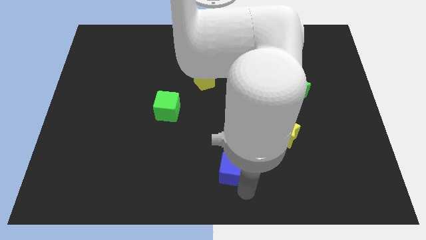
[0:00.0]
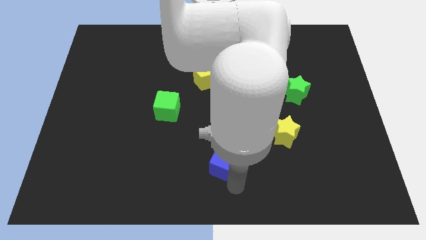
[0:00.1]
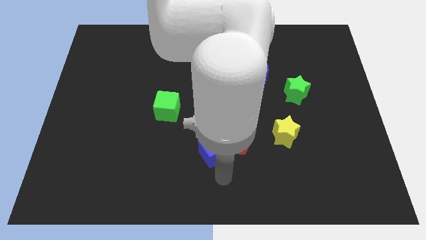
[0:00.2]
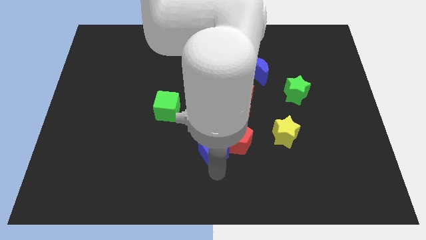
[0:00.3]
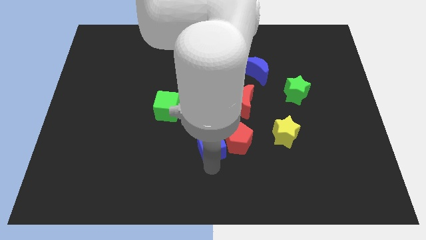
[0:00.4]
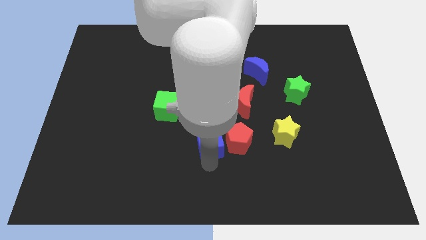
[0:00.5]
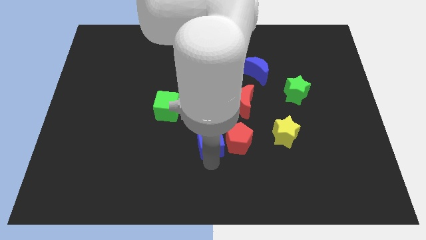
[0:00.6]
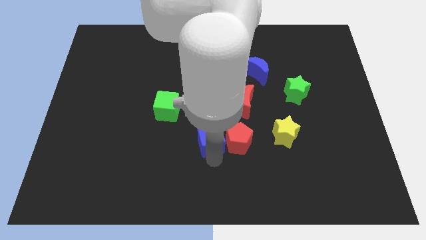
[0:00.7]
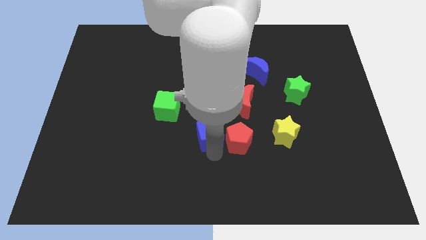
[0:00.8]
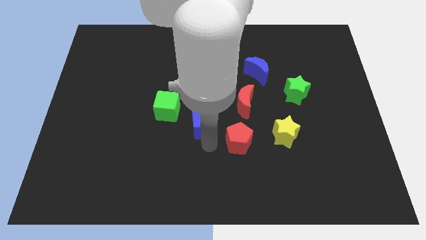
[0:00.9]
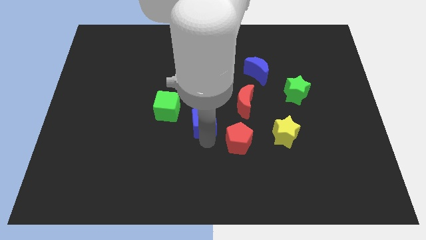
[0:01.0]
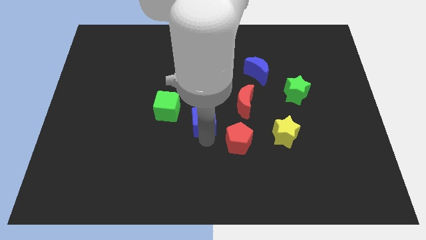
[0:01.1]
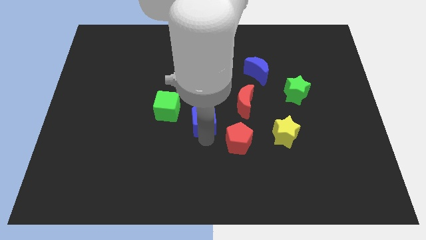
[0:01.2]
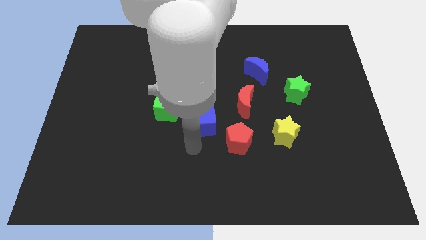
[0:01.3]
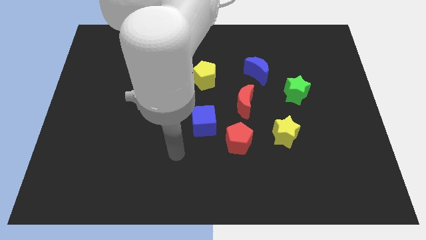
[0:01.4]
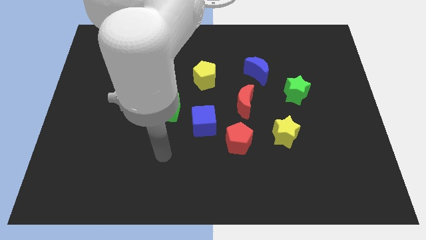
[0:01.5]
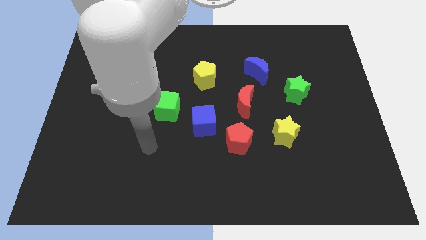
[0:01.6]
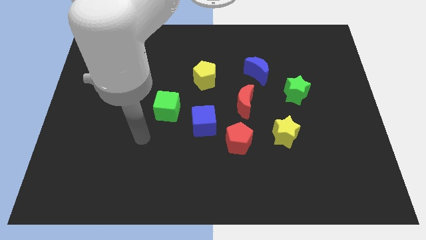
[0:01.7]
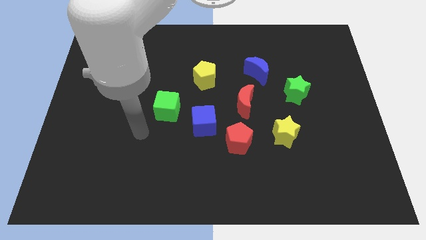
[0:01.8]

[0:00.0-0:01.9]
move the blue cube towards the center of the board

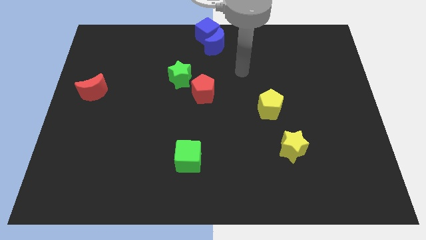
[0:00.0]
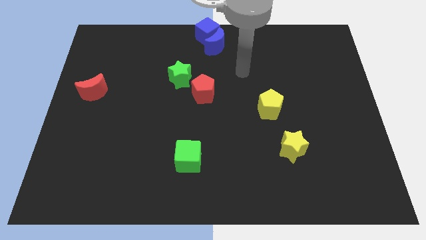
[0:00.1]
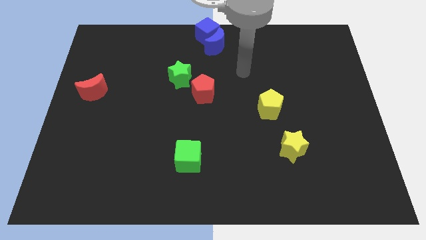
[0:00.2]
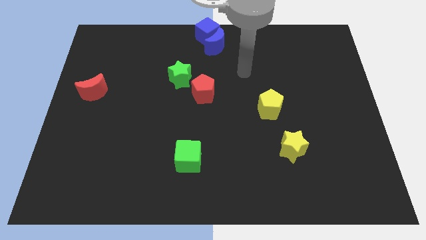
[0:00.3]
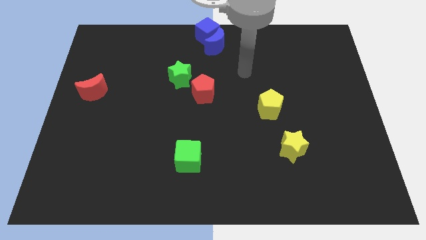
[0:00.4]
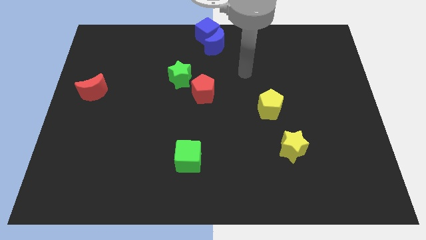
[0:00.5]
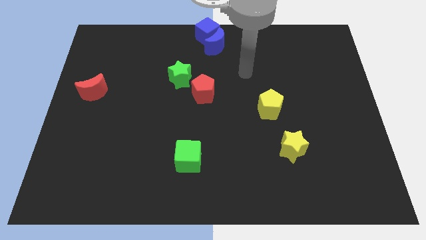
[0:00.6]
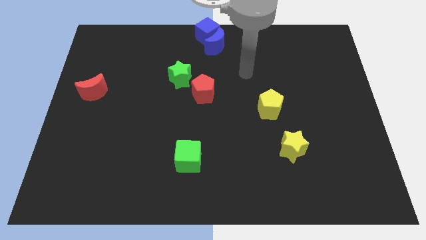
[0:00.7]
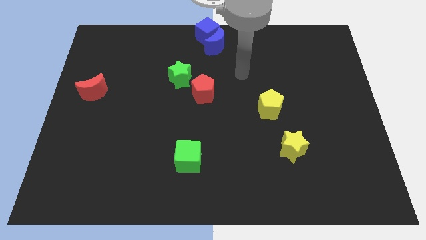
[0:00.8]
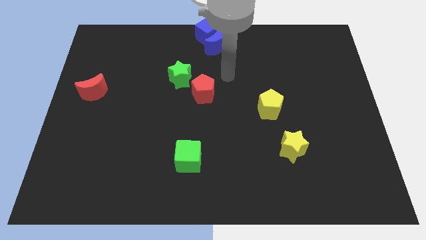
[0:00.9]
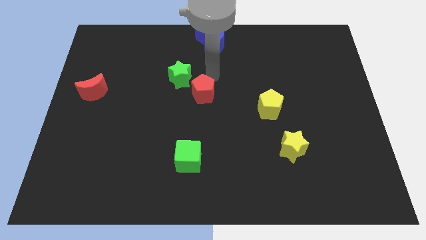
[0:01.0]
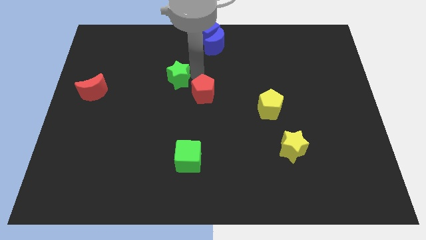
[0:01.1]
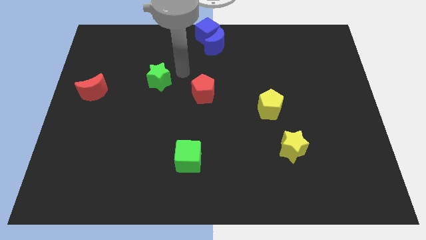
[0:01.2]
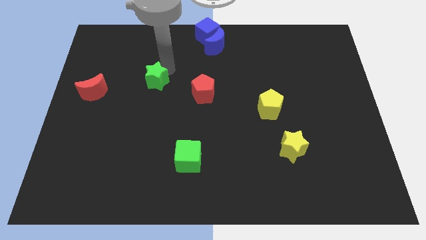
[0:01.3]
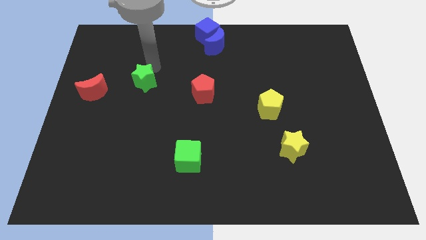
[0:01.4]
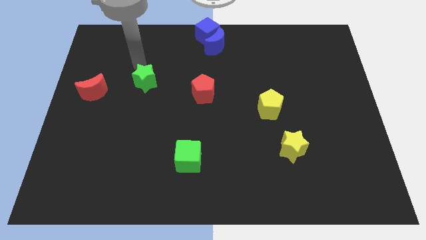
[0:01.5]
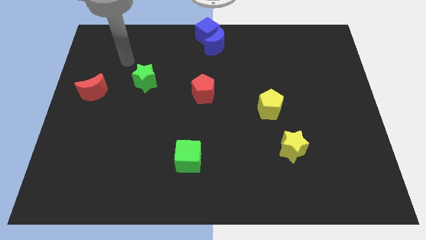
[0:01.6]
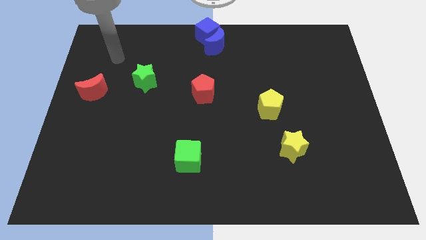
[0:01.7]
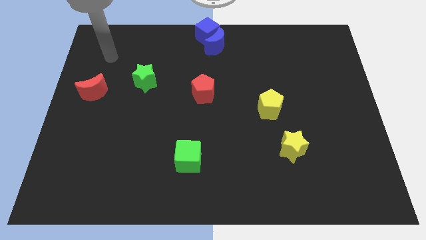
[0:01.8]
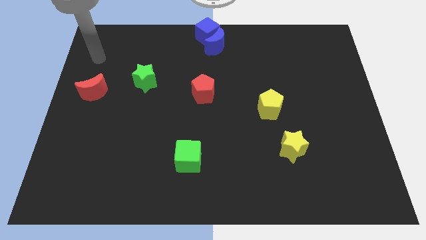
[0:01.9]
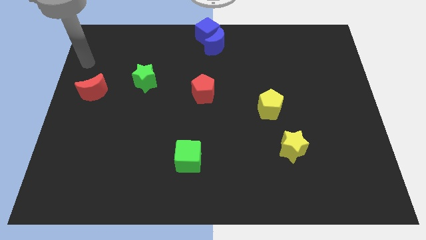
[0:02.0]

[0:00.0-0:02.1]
place green star to the right of red moon

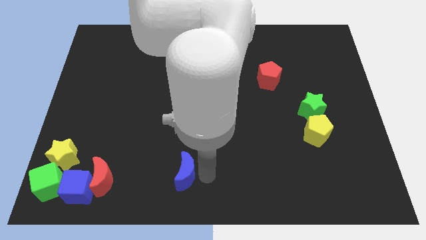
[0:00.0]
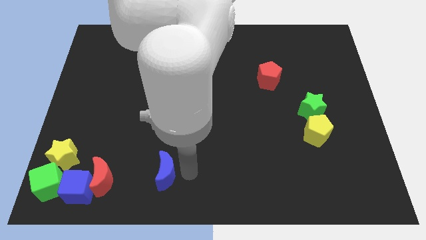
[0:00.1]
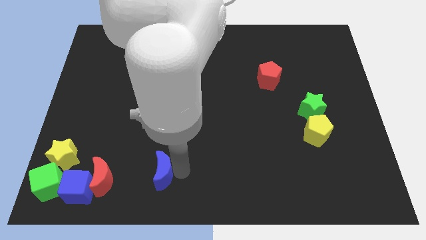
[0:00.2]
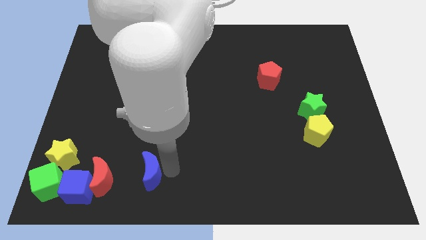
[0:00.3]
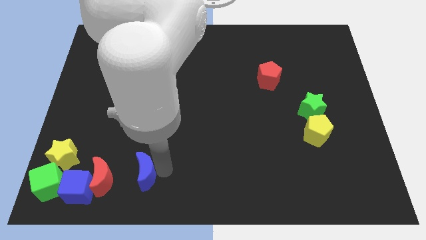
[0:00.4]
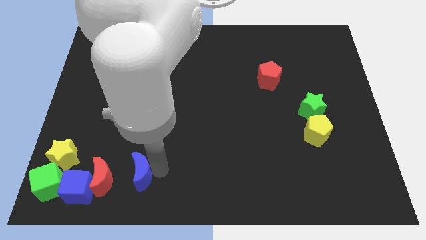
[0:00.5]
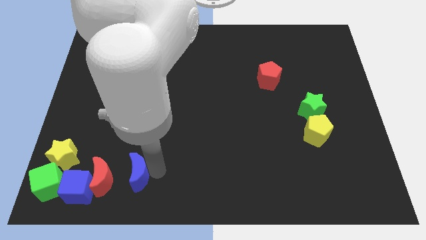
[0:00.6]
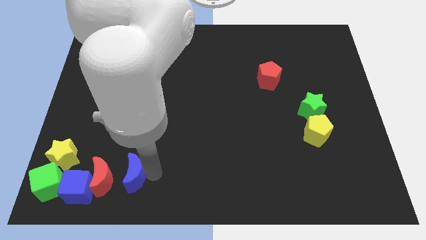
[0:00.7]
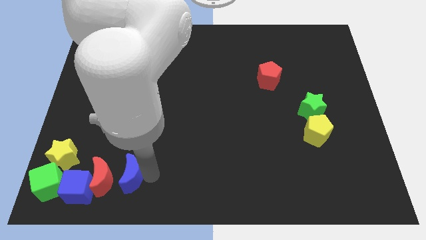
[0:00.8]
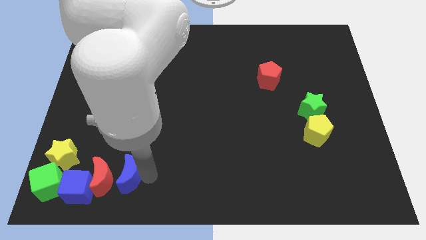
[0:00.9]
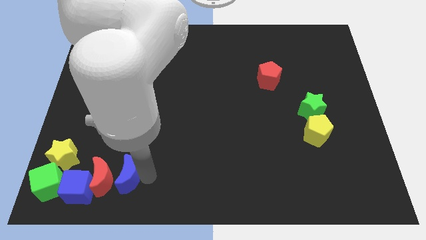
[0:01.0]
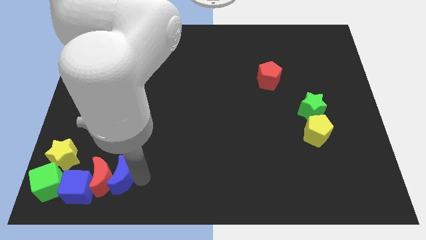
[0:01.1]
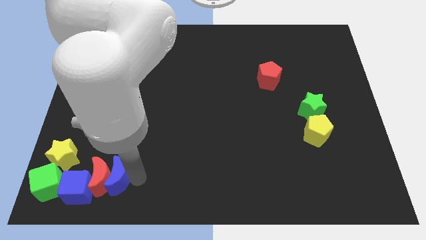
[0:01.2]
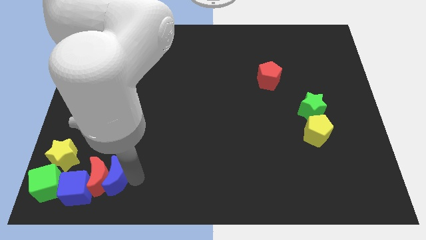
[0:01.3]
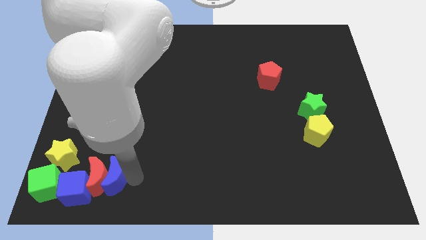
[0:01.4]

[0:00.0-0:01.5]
move blue moon into the red moon

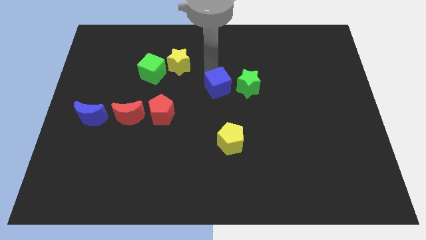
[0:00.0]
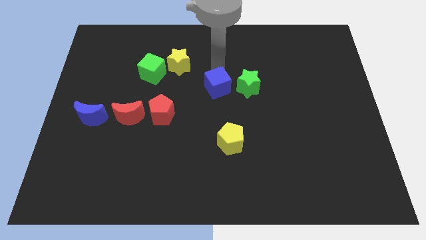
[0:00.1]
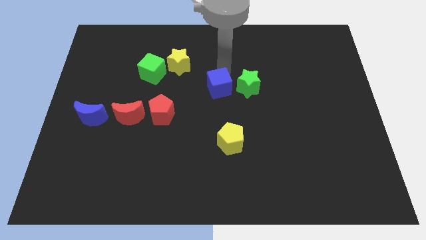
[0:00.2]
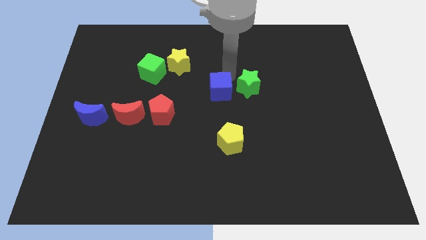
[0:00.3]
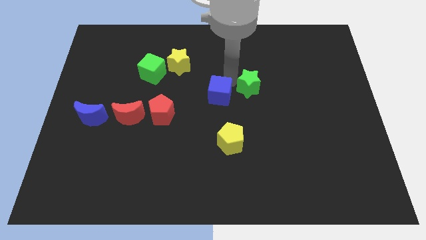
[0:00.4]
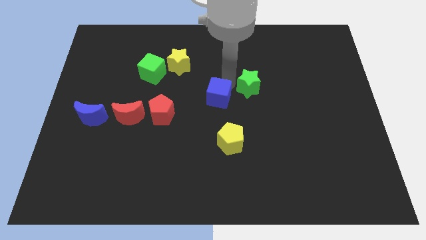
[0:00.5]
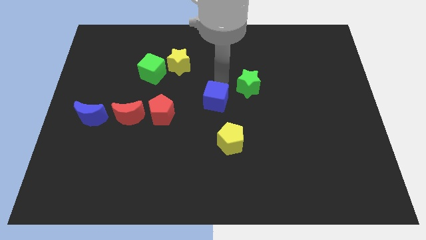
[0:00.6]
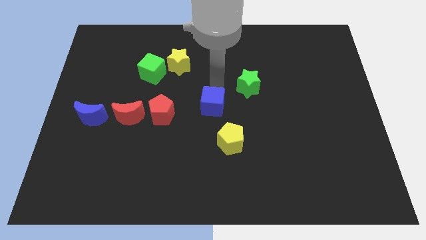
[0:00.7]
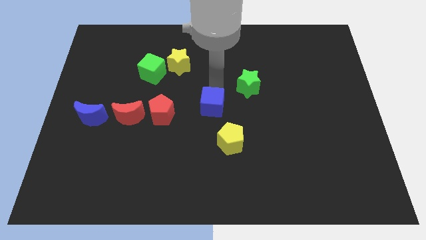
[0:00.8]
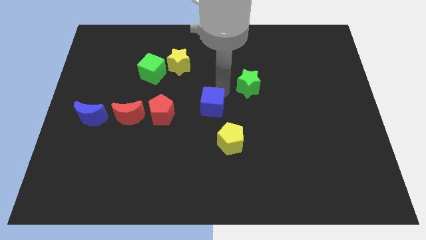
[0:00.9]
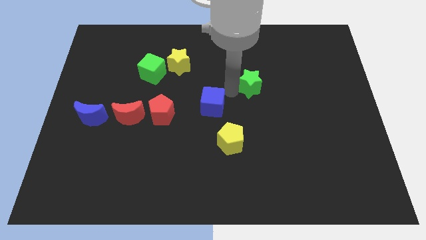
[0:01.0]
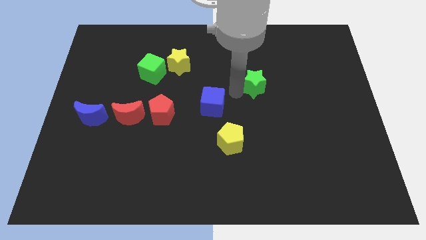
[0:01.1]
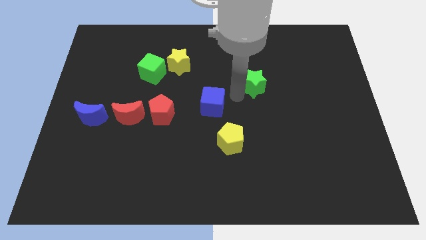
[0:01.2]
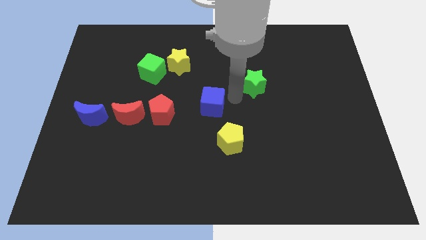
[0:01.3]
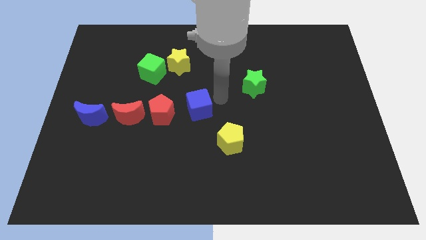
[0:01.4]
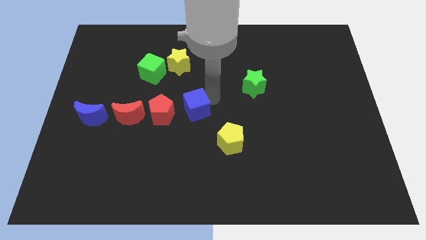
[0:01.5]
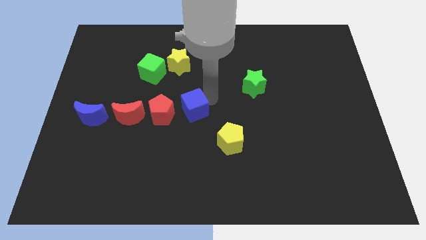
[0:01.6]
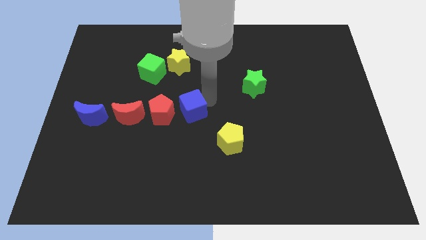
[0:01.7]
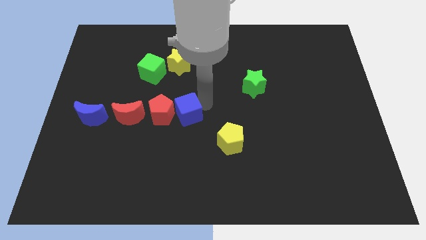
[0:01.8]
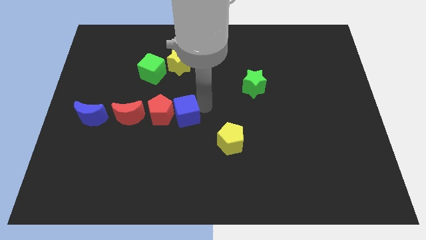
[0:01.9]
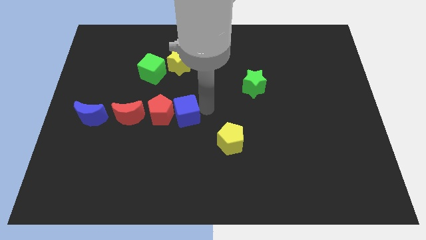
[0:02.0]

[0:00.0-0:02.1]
separate blue cube from green star

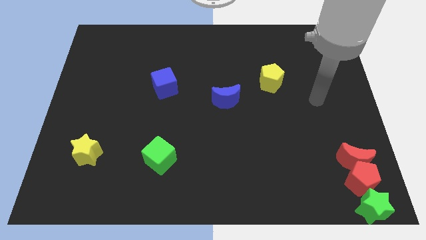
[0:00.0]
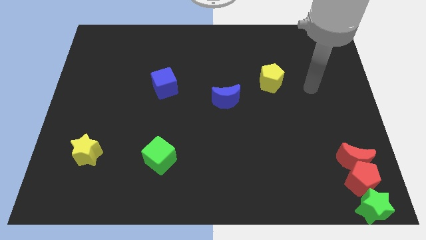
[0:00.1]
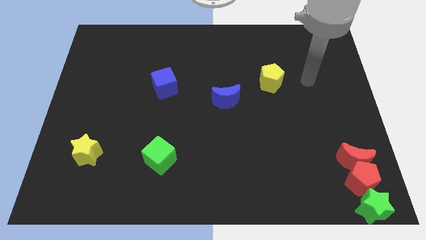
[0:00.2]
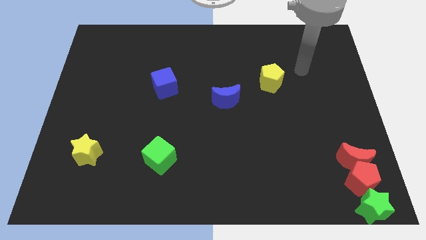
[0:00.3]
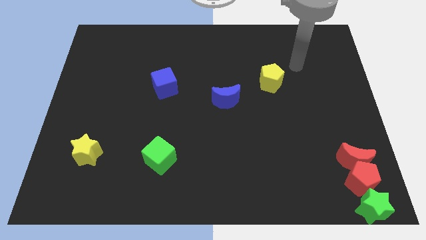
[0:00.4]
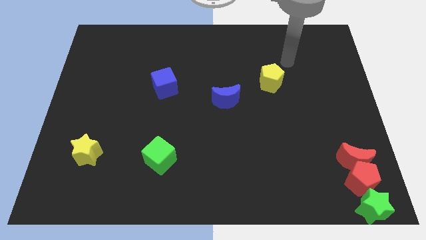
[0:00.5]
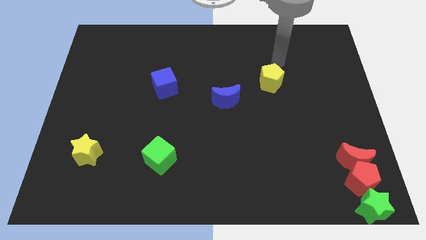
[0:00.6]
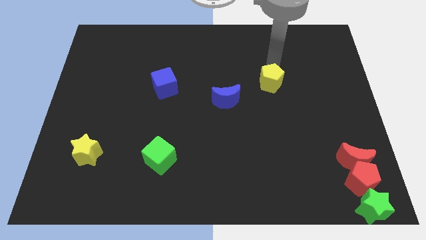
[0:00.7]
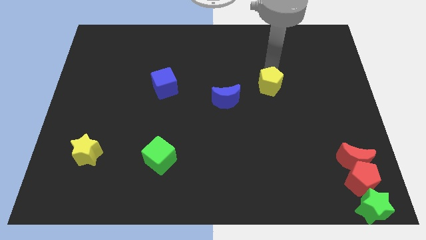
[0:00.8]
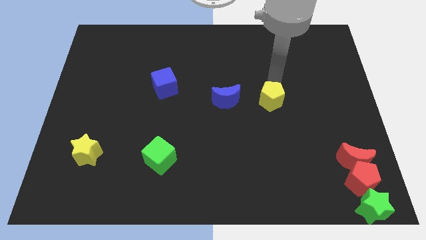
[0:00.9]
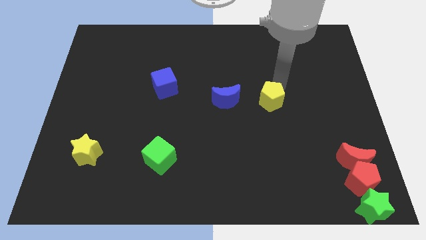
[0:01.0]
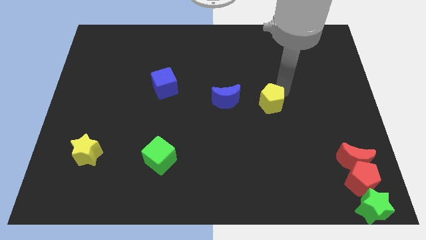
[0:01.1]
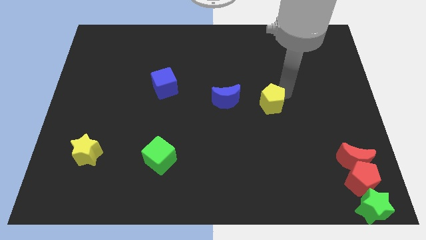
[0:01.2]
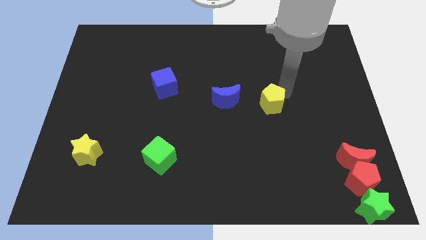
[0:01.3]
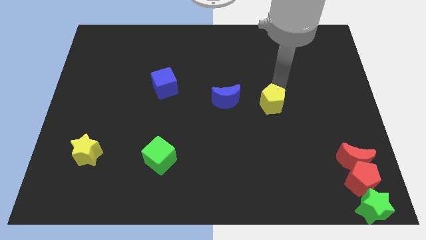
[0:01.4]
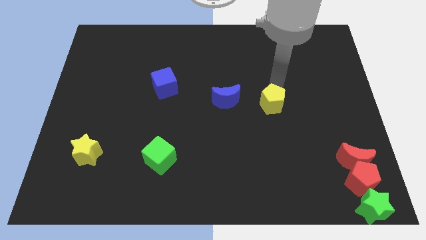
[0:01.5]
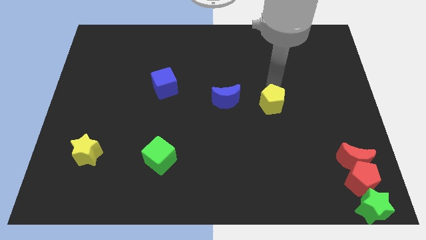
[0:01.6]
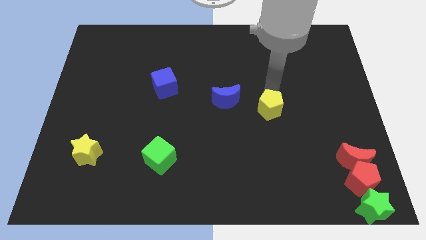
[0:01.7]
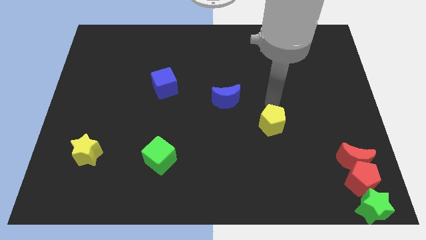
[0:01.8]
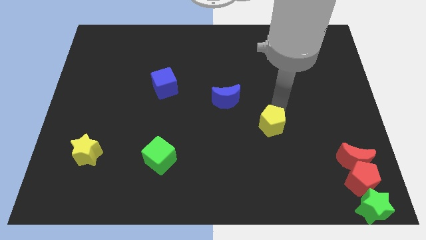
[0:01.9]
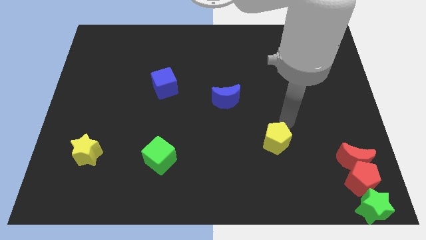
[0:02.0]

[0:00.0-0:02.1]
put the yellow pentagon to the bottom right of the blue crescent
